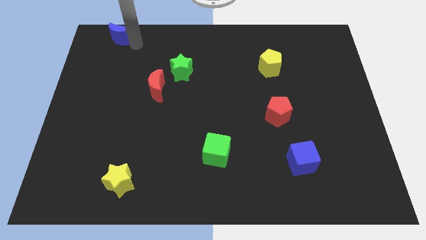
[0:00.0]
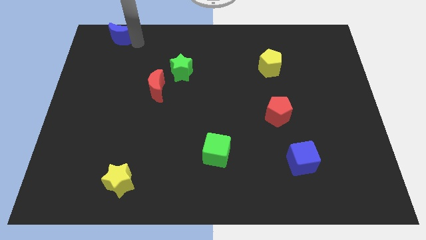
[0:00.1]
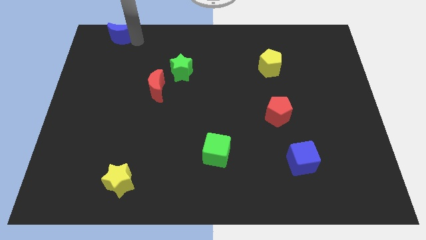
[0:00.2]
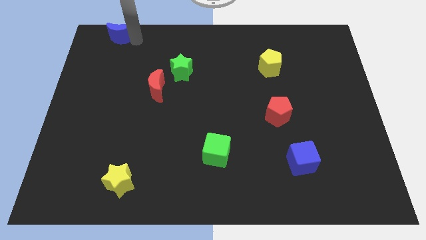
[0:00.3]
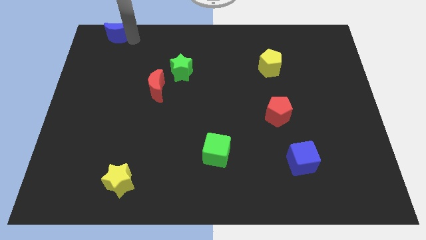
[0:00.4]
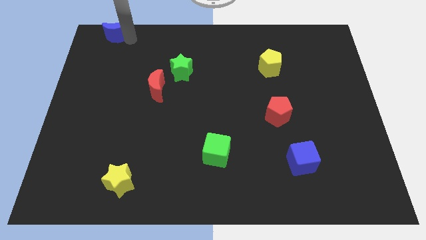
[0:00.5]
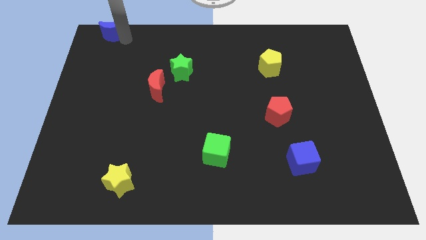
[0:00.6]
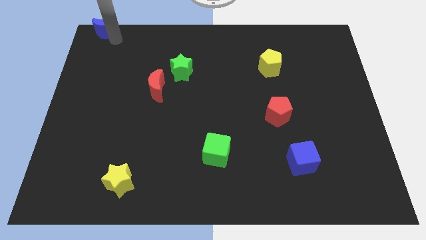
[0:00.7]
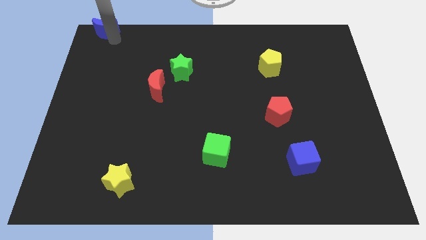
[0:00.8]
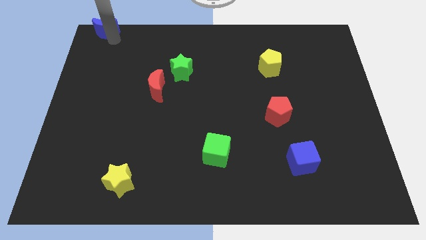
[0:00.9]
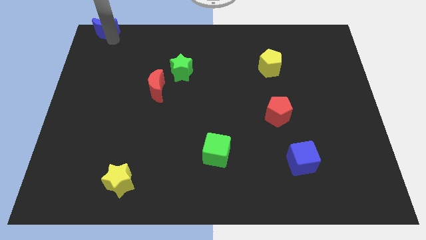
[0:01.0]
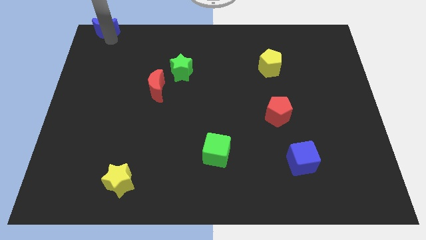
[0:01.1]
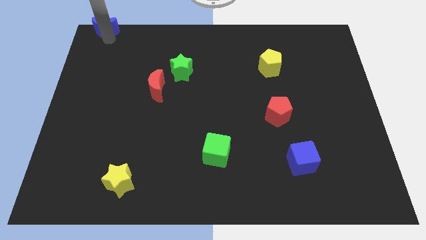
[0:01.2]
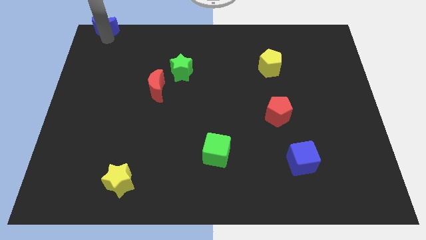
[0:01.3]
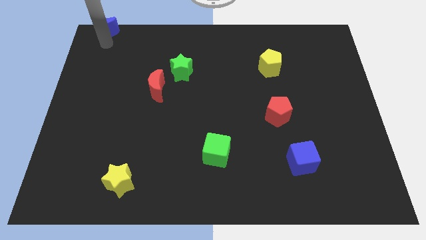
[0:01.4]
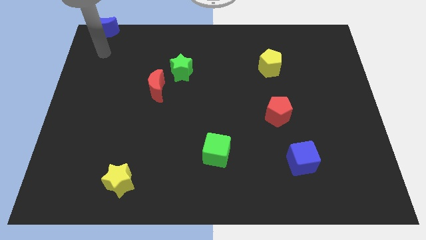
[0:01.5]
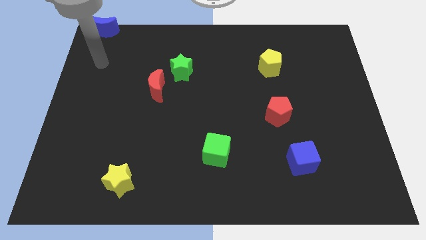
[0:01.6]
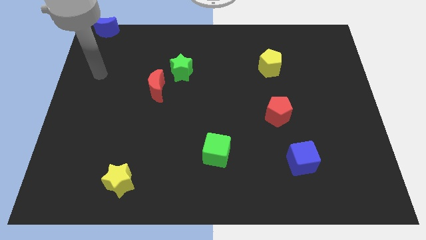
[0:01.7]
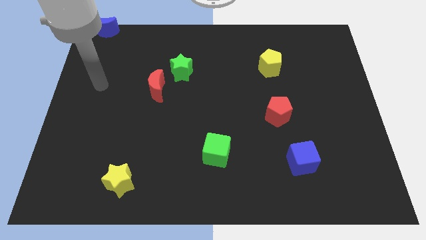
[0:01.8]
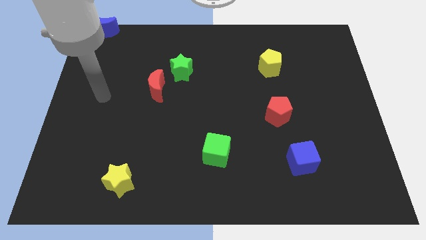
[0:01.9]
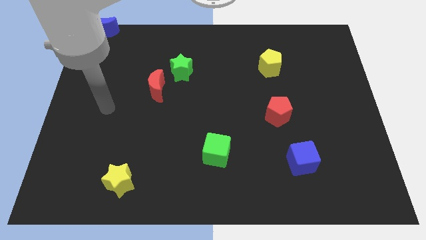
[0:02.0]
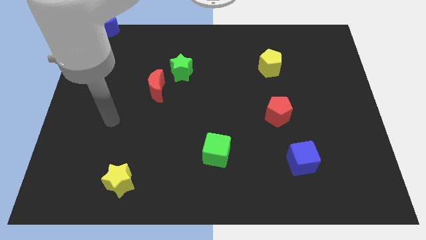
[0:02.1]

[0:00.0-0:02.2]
move your arm away from the blue moon

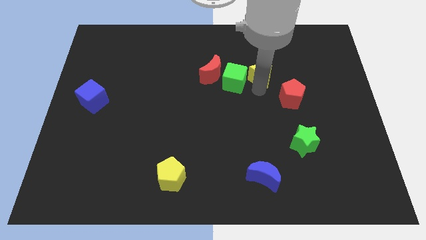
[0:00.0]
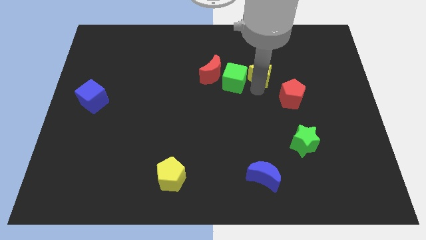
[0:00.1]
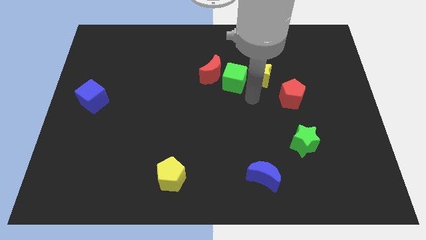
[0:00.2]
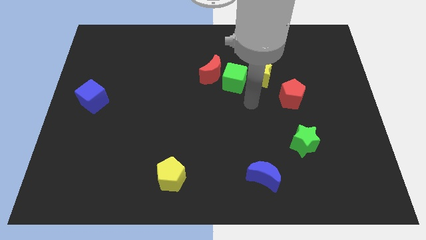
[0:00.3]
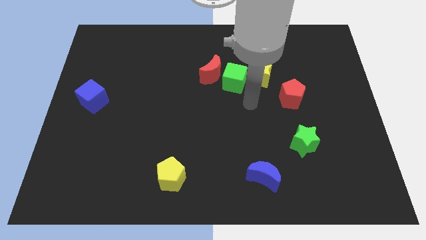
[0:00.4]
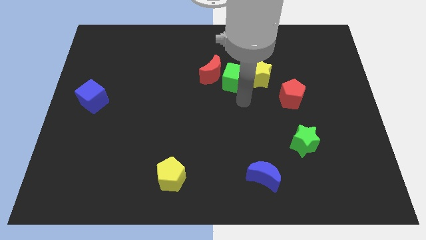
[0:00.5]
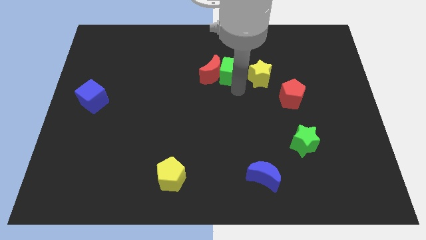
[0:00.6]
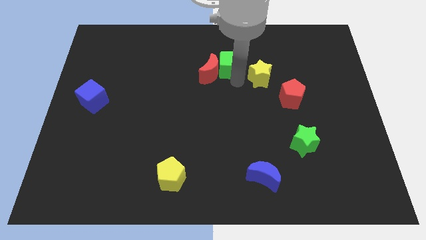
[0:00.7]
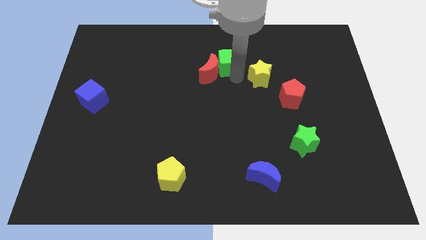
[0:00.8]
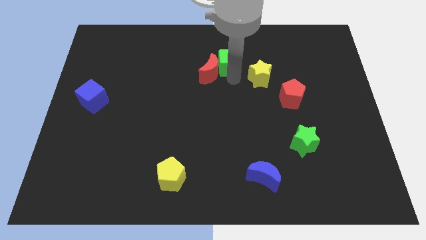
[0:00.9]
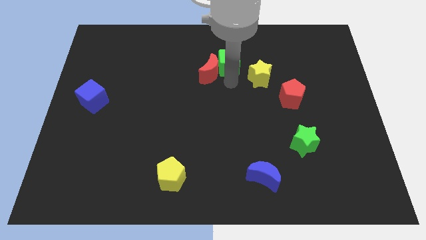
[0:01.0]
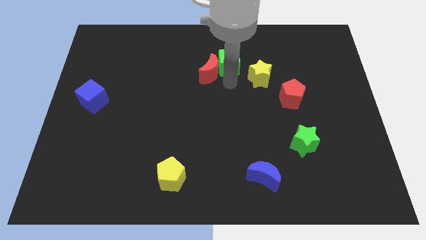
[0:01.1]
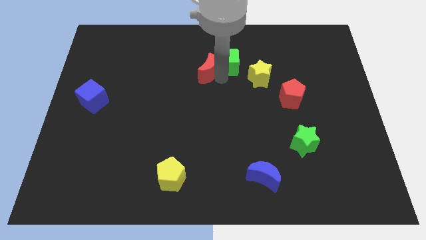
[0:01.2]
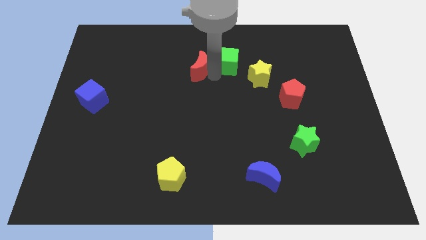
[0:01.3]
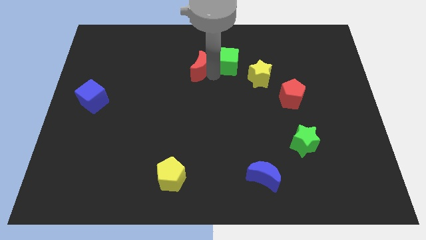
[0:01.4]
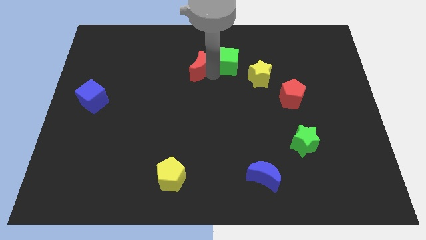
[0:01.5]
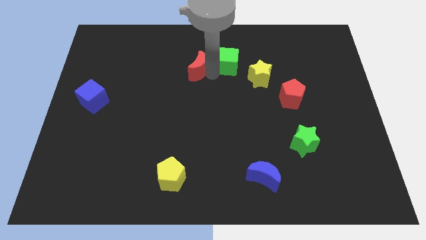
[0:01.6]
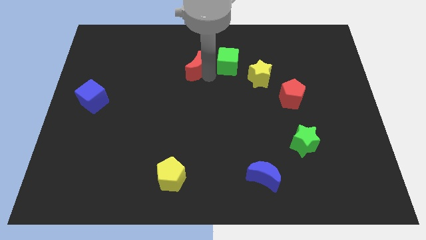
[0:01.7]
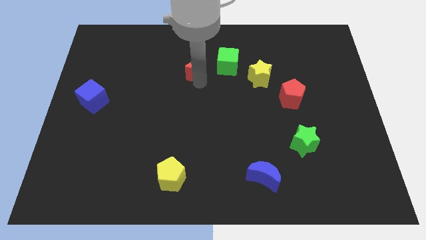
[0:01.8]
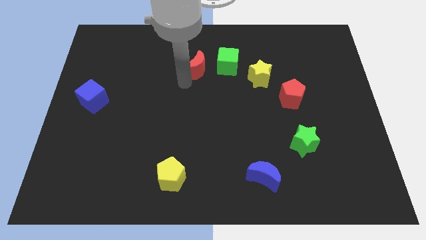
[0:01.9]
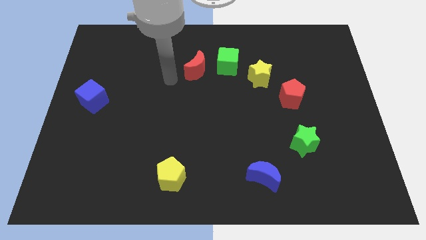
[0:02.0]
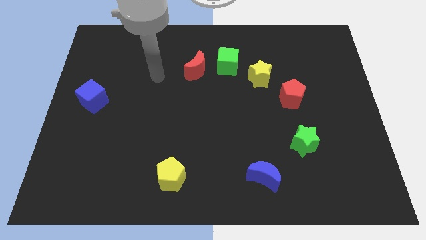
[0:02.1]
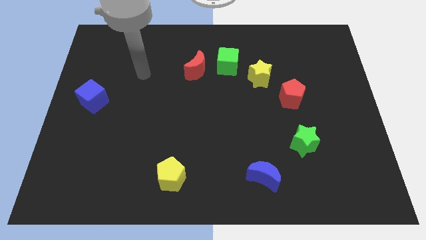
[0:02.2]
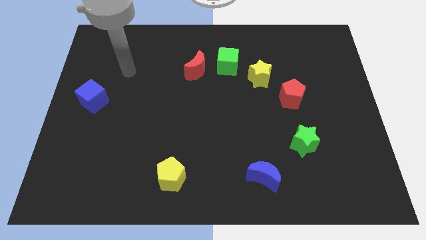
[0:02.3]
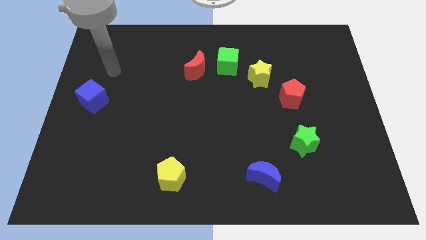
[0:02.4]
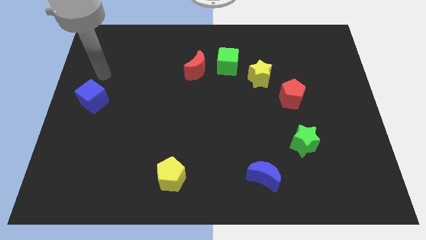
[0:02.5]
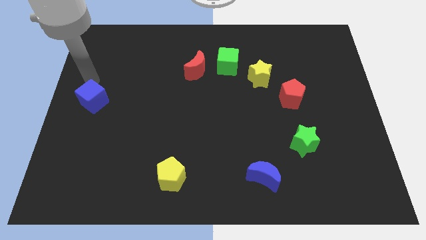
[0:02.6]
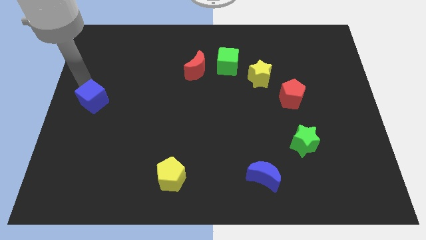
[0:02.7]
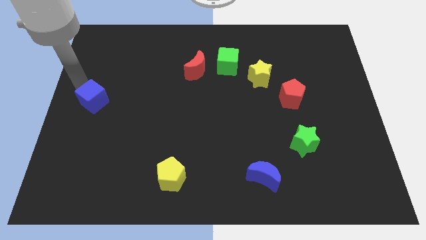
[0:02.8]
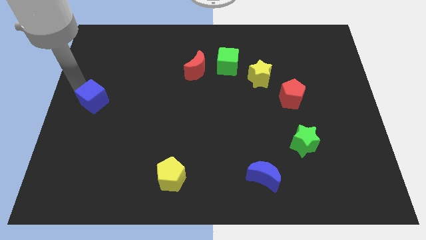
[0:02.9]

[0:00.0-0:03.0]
push your arm towards the left side of the blue cube

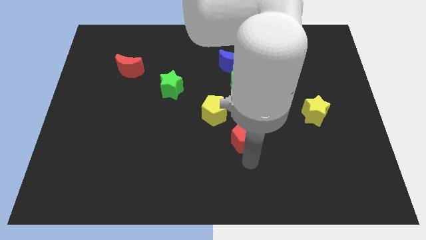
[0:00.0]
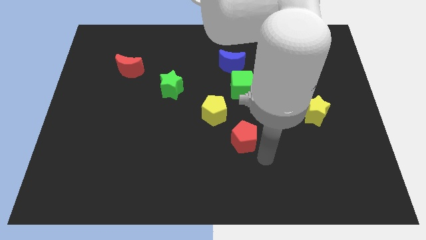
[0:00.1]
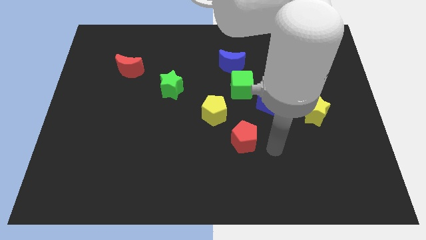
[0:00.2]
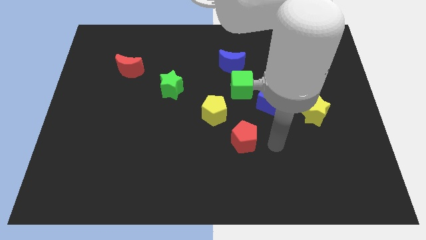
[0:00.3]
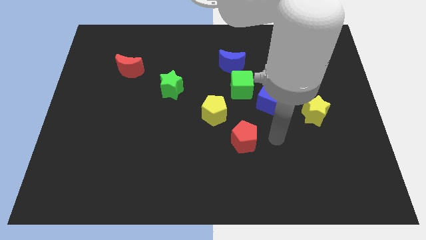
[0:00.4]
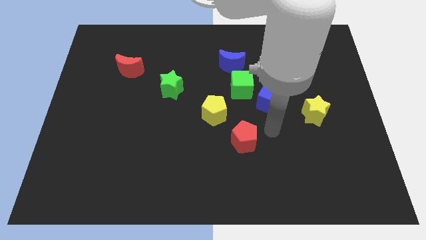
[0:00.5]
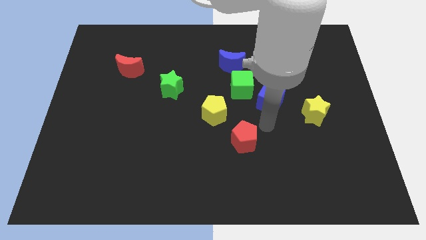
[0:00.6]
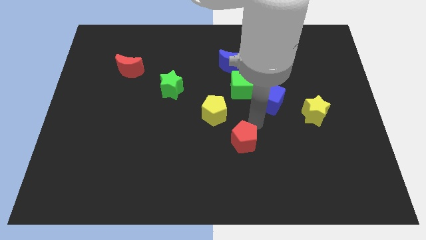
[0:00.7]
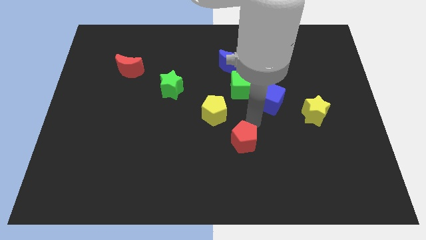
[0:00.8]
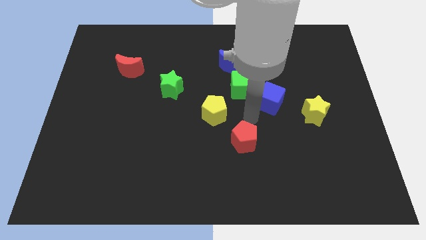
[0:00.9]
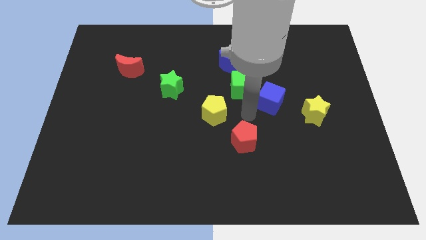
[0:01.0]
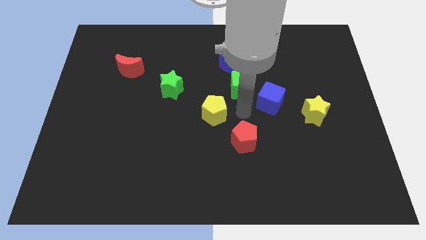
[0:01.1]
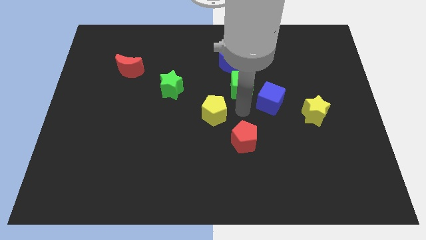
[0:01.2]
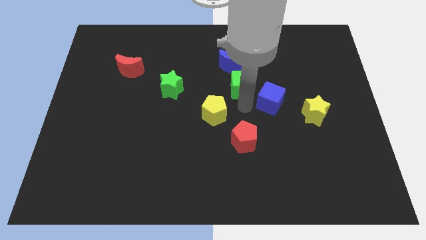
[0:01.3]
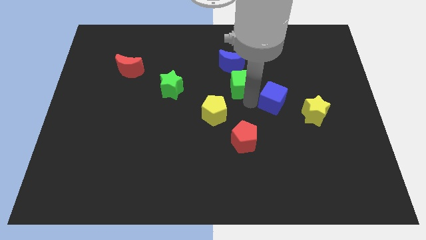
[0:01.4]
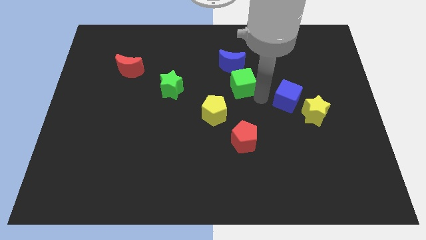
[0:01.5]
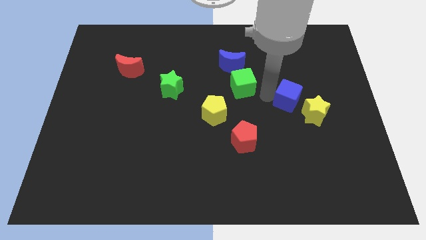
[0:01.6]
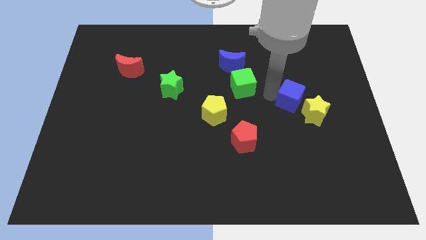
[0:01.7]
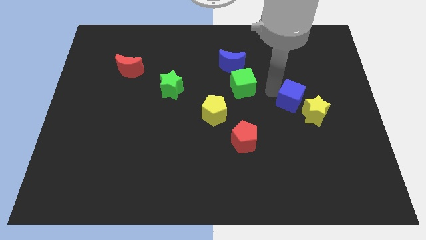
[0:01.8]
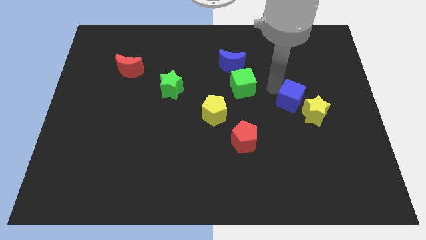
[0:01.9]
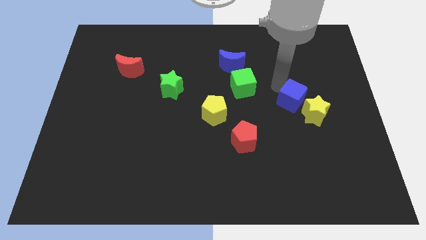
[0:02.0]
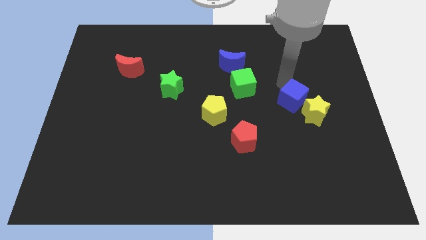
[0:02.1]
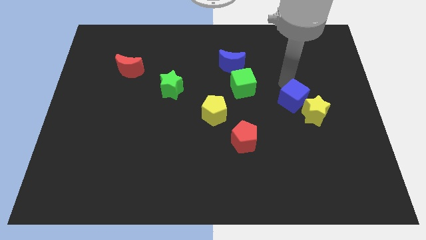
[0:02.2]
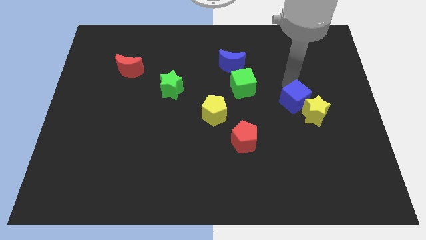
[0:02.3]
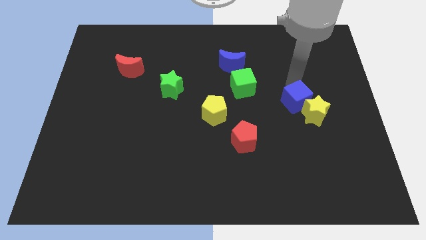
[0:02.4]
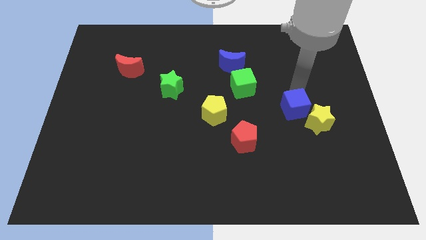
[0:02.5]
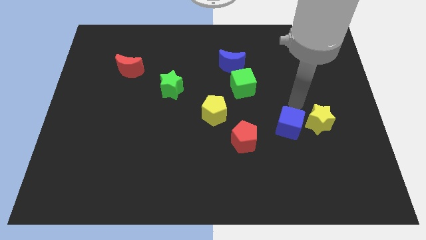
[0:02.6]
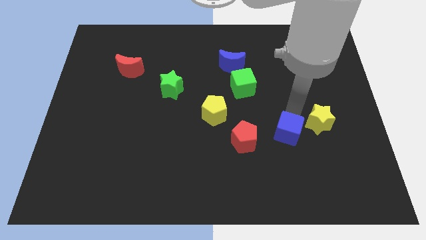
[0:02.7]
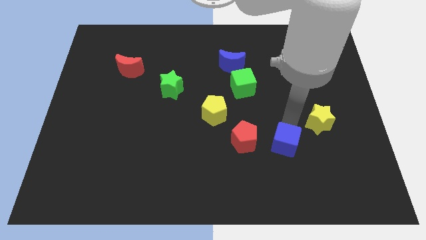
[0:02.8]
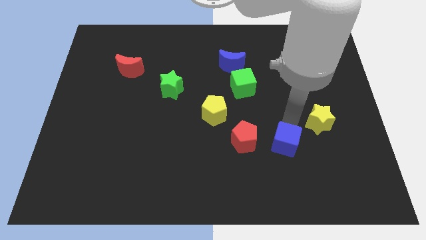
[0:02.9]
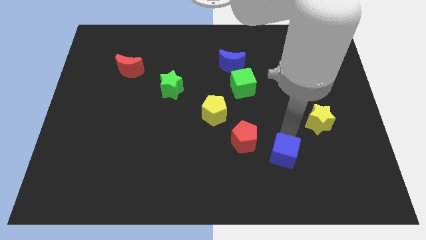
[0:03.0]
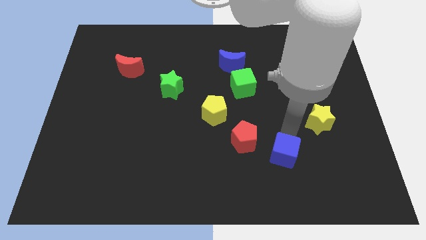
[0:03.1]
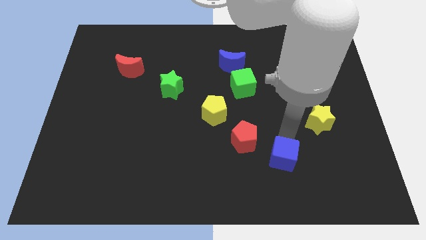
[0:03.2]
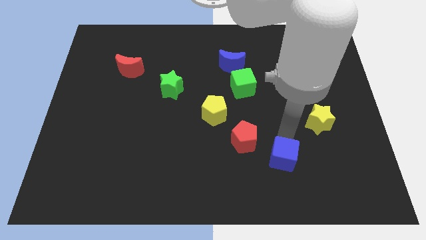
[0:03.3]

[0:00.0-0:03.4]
separate green cube and blue cube

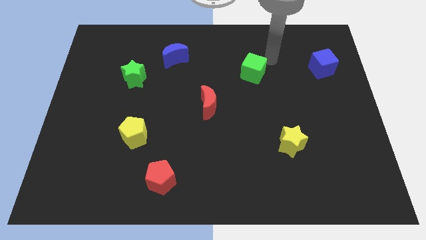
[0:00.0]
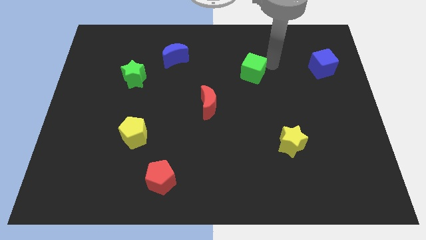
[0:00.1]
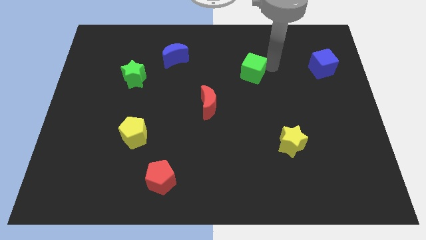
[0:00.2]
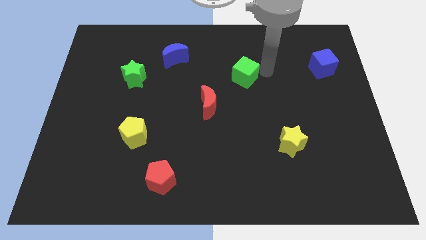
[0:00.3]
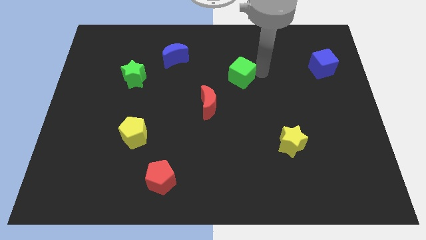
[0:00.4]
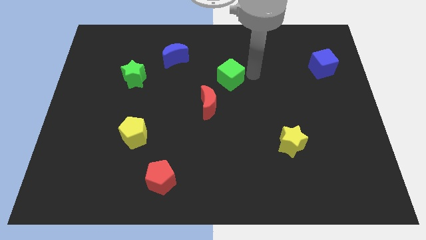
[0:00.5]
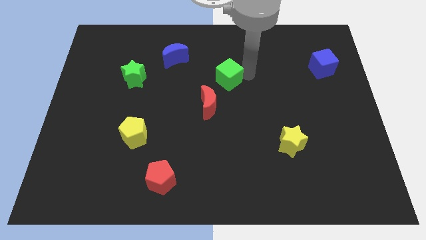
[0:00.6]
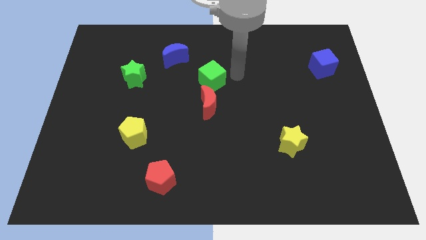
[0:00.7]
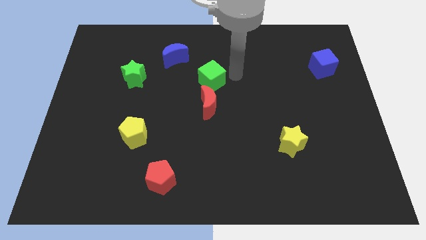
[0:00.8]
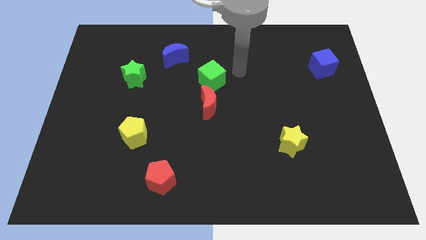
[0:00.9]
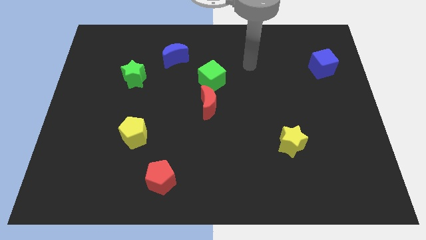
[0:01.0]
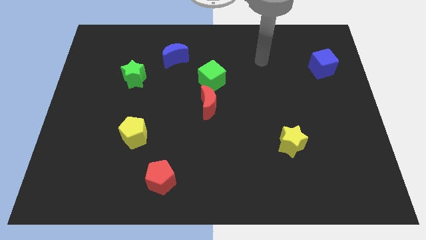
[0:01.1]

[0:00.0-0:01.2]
place the green cube above the red crescent
